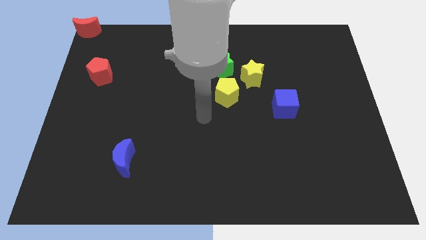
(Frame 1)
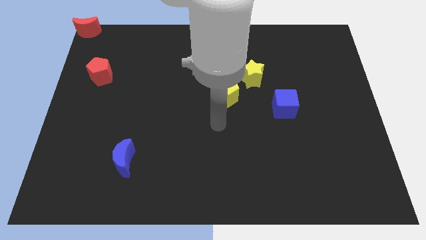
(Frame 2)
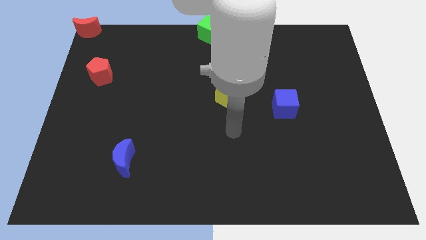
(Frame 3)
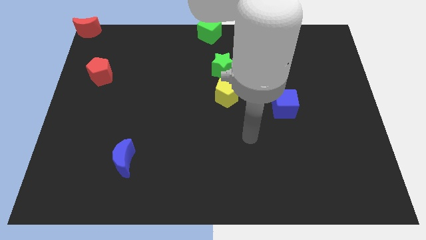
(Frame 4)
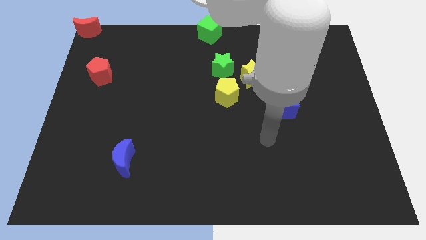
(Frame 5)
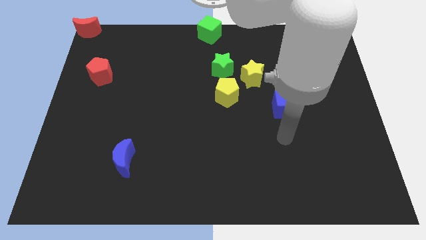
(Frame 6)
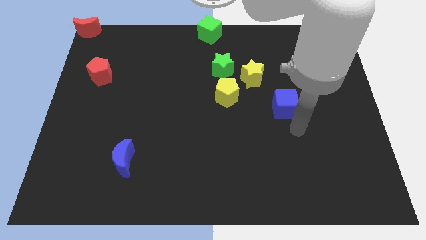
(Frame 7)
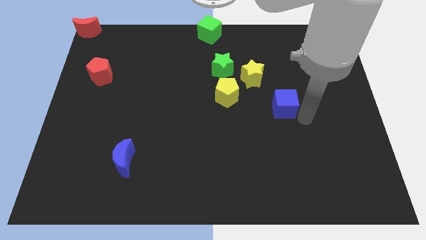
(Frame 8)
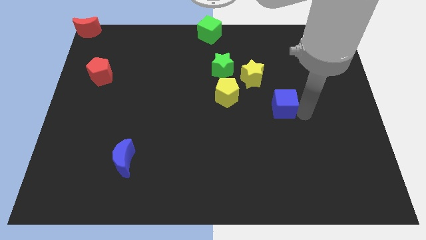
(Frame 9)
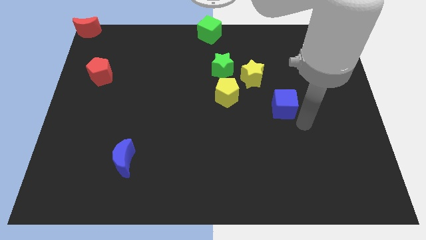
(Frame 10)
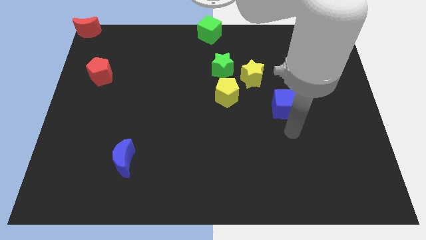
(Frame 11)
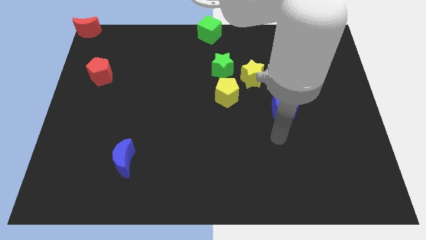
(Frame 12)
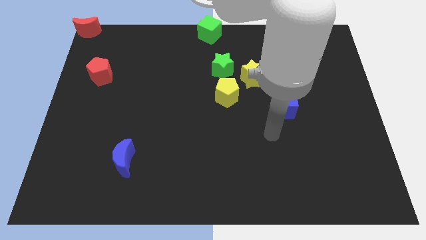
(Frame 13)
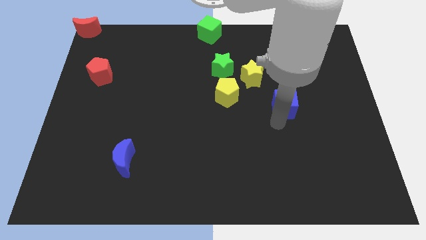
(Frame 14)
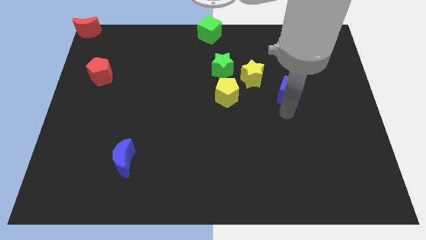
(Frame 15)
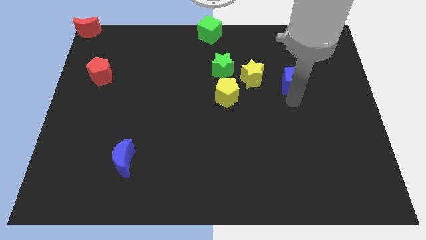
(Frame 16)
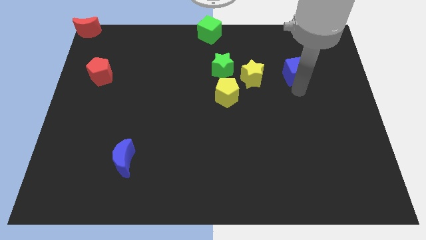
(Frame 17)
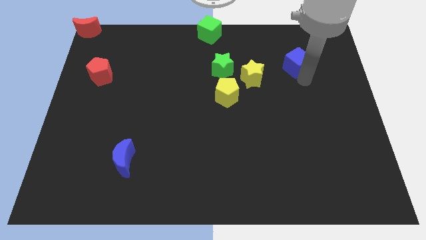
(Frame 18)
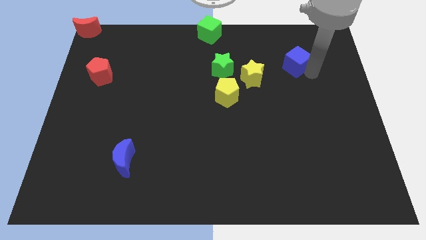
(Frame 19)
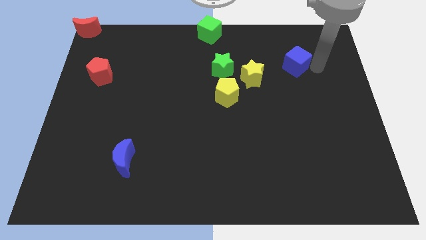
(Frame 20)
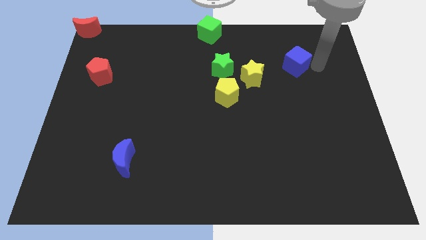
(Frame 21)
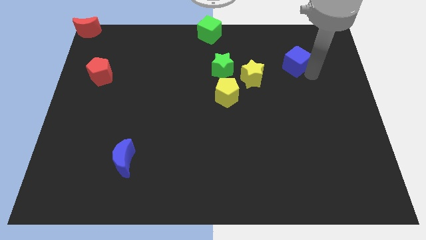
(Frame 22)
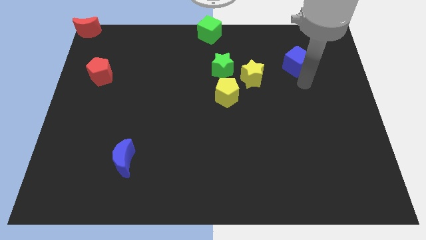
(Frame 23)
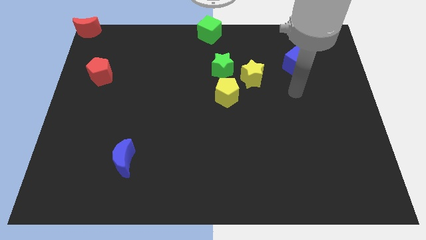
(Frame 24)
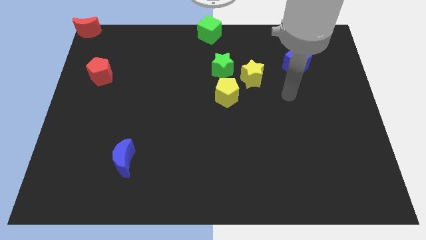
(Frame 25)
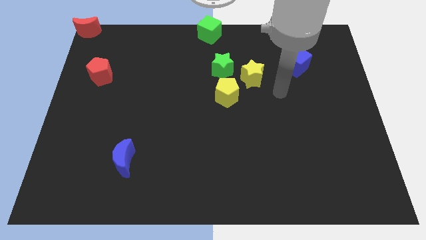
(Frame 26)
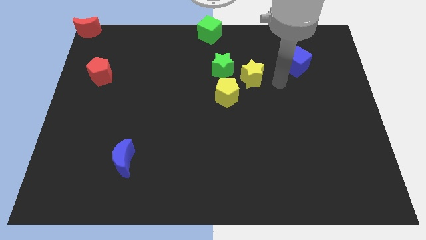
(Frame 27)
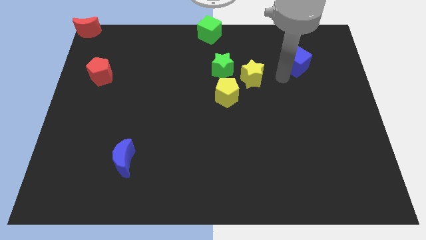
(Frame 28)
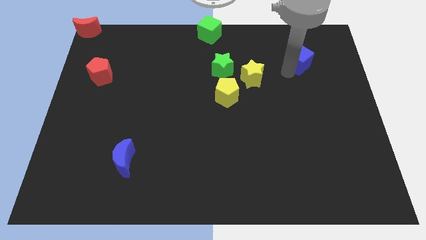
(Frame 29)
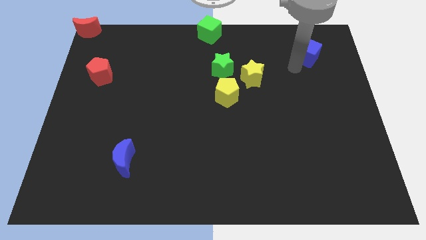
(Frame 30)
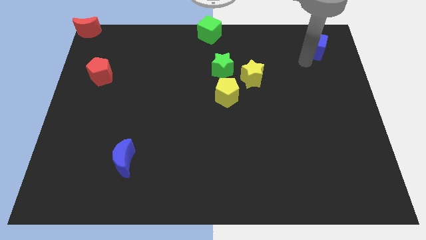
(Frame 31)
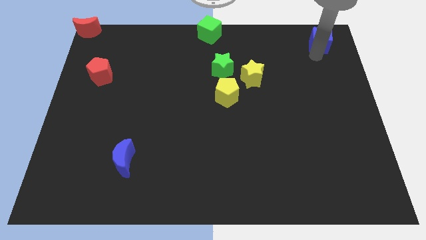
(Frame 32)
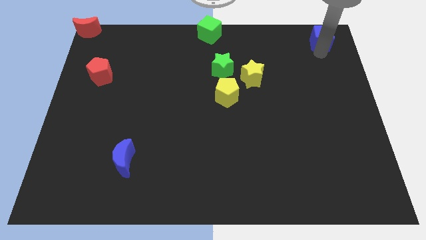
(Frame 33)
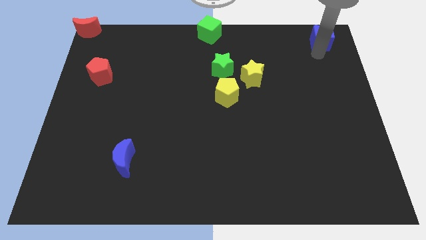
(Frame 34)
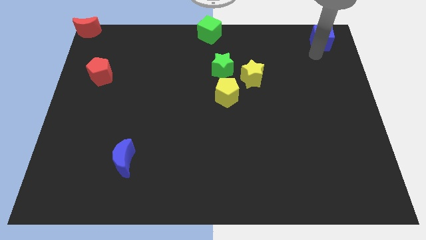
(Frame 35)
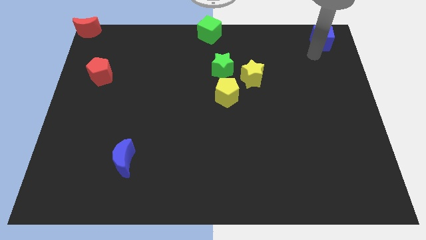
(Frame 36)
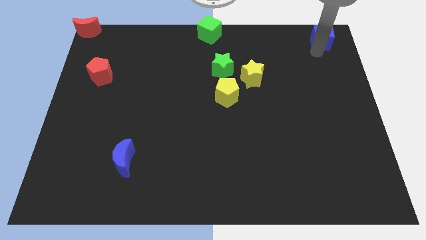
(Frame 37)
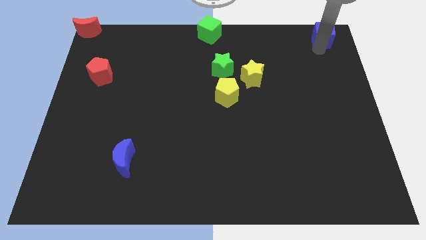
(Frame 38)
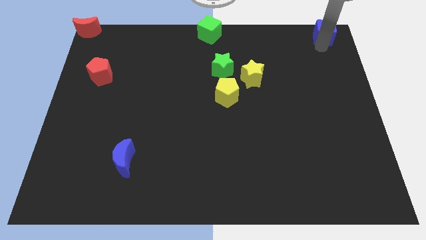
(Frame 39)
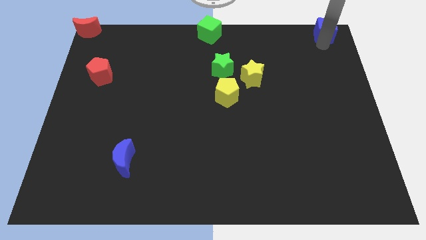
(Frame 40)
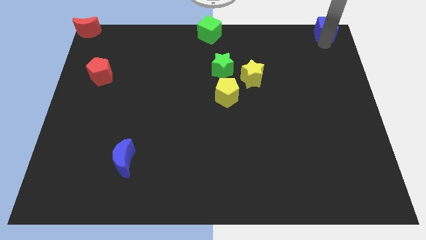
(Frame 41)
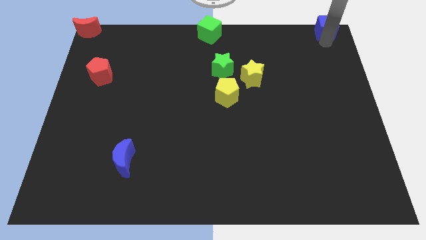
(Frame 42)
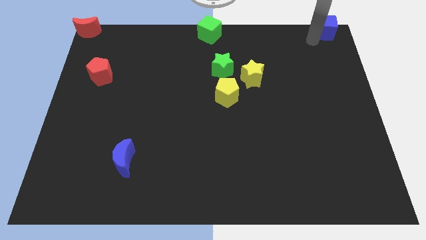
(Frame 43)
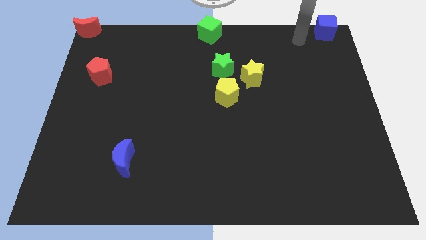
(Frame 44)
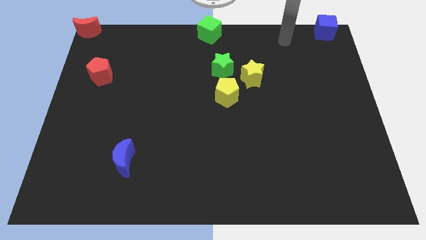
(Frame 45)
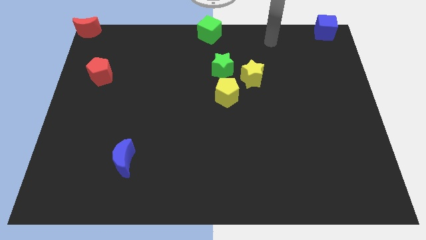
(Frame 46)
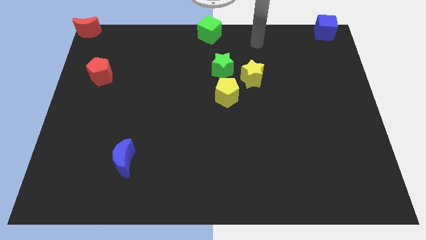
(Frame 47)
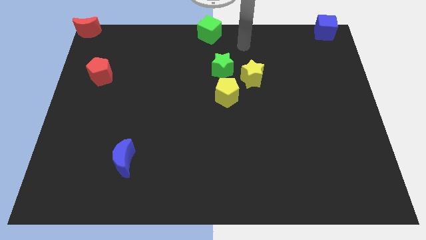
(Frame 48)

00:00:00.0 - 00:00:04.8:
move the blue cube to the top right corner of the board

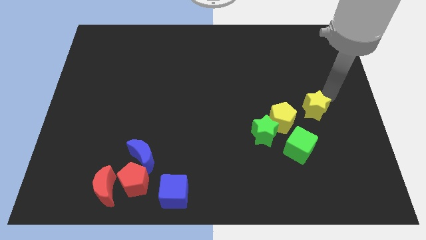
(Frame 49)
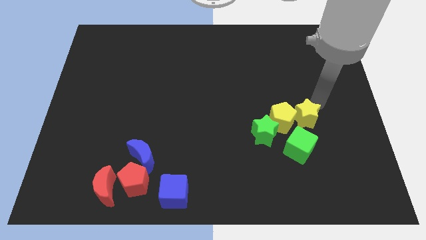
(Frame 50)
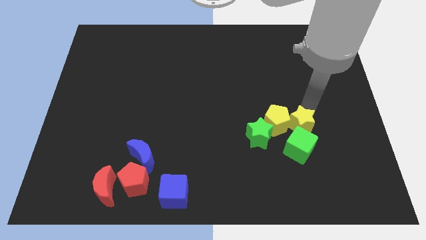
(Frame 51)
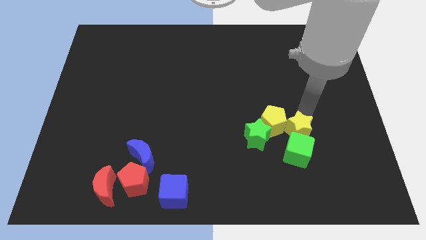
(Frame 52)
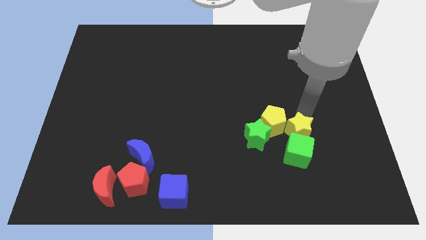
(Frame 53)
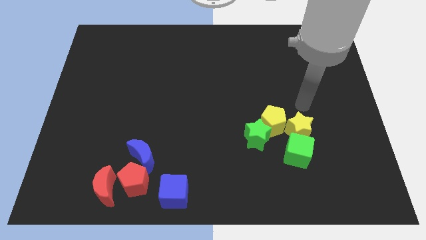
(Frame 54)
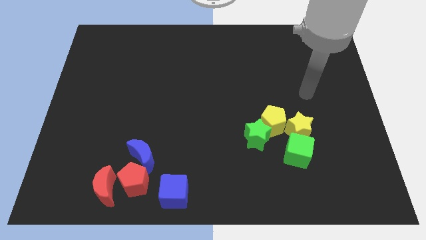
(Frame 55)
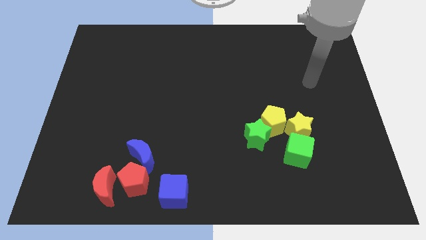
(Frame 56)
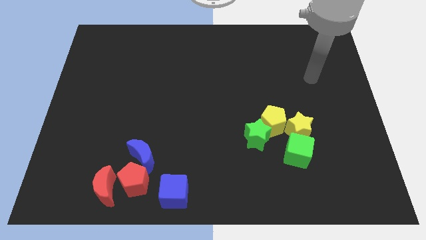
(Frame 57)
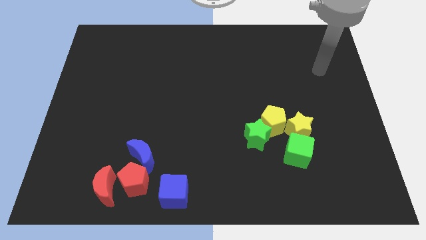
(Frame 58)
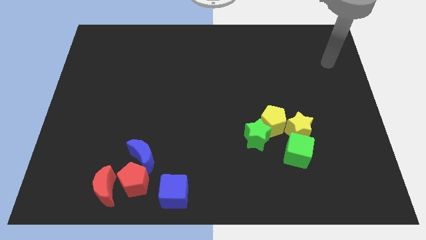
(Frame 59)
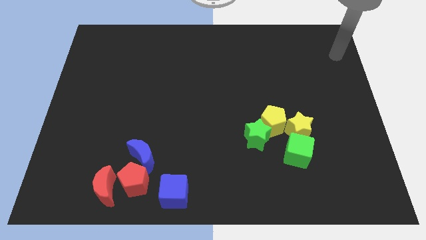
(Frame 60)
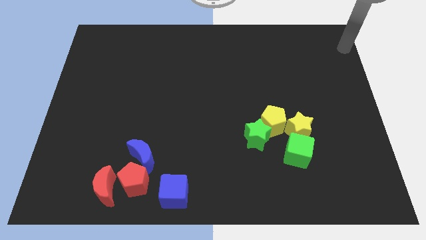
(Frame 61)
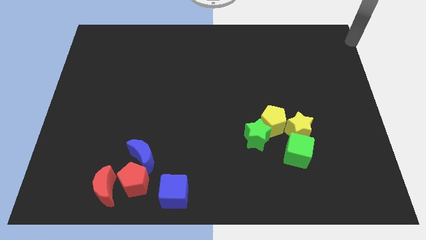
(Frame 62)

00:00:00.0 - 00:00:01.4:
push the yellow star to the top of the green cube

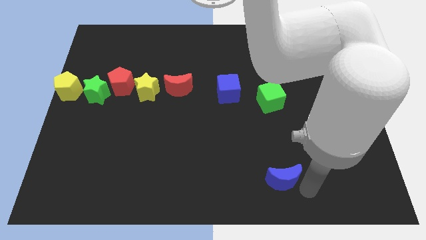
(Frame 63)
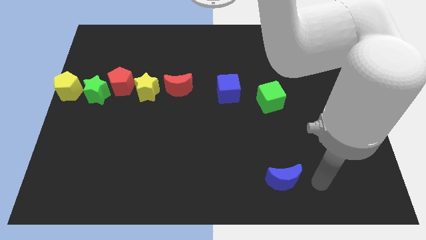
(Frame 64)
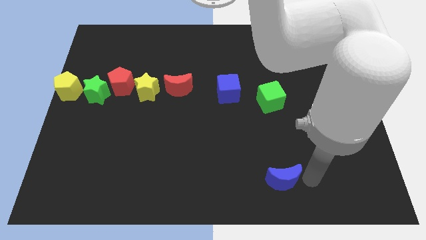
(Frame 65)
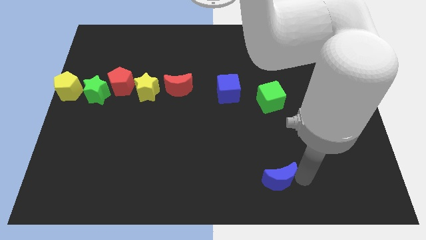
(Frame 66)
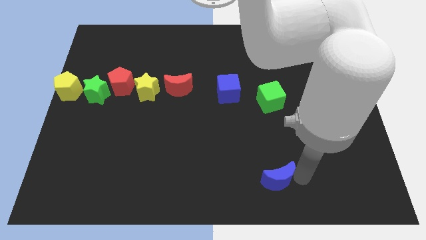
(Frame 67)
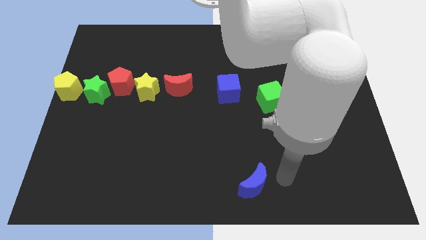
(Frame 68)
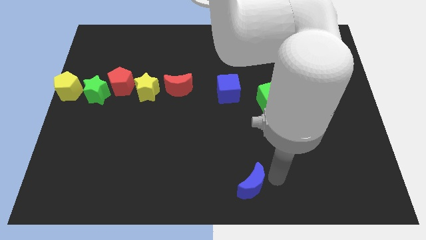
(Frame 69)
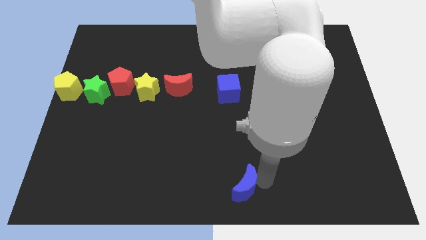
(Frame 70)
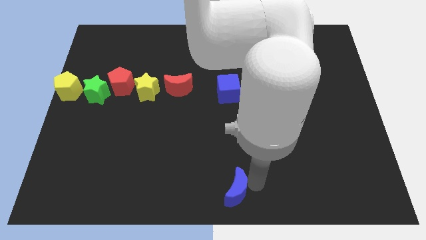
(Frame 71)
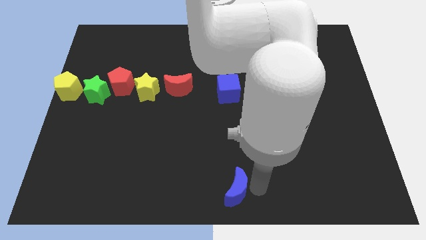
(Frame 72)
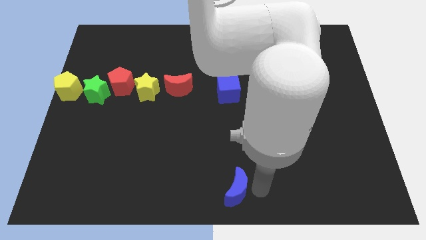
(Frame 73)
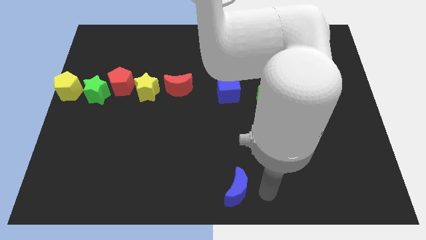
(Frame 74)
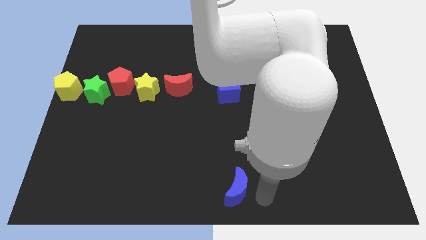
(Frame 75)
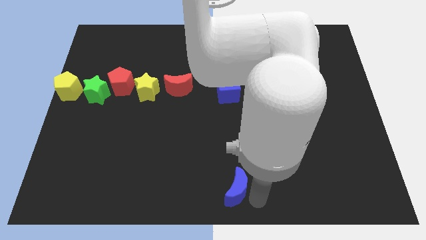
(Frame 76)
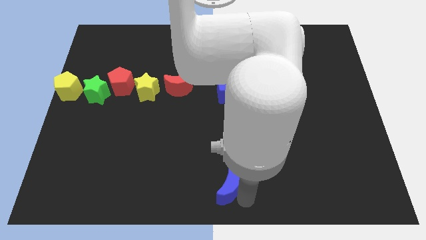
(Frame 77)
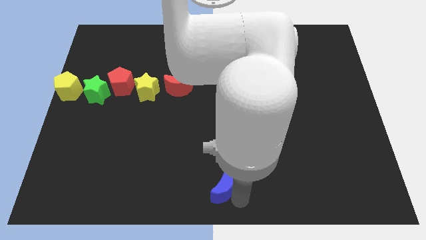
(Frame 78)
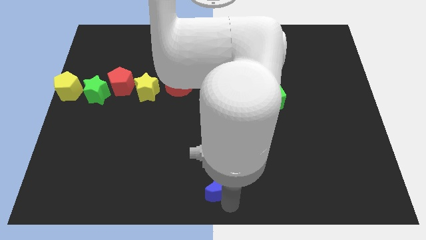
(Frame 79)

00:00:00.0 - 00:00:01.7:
move the blue crescent to the bottom centre of the board

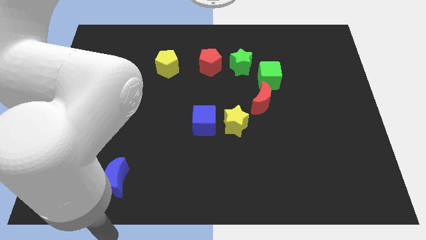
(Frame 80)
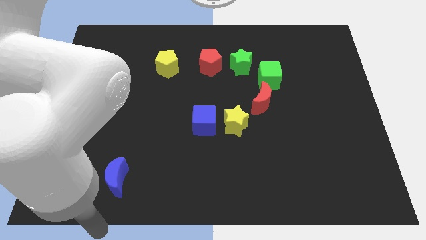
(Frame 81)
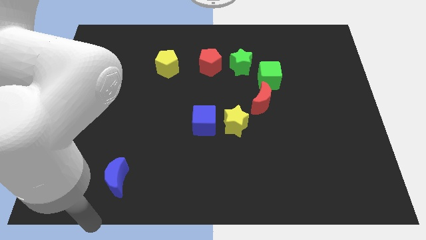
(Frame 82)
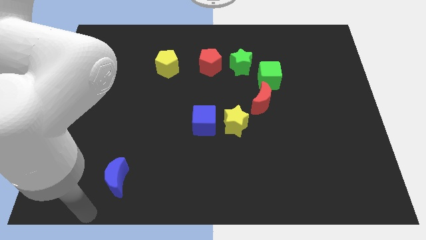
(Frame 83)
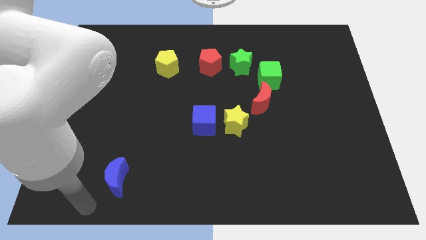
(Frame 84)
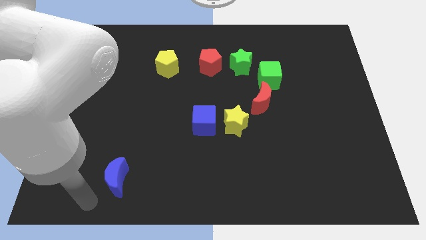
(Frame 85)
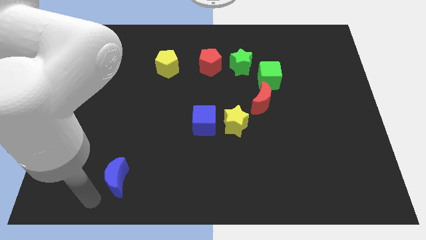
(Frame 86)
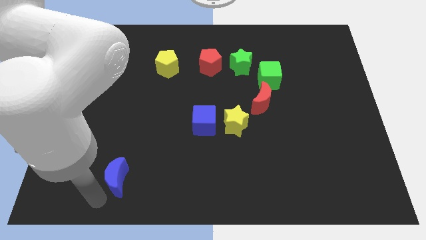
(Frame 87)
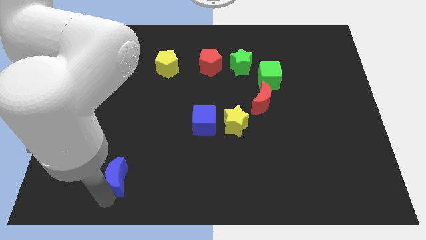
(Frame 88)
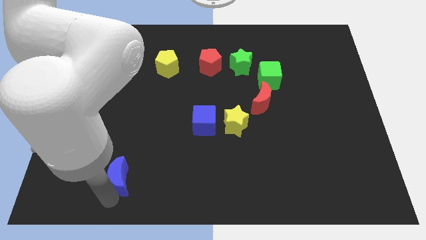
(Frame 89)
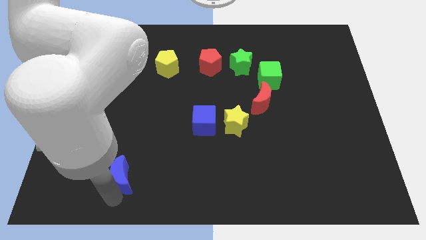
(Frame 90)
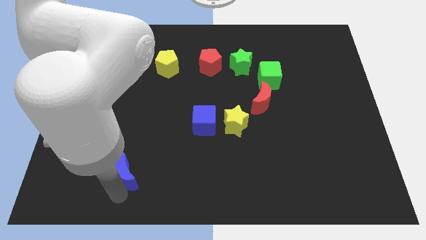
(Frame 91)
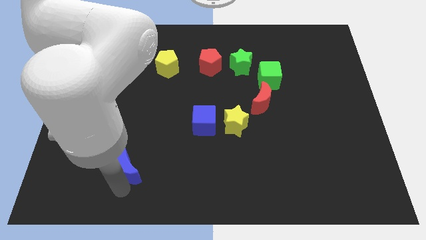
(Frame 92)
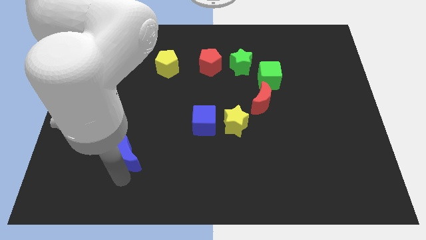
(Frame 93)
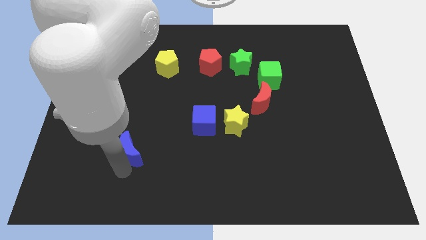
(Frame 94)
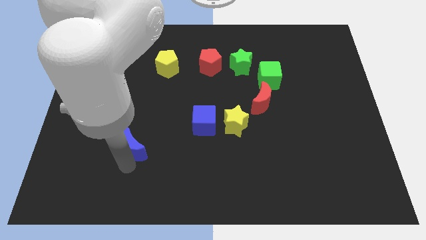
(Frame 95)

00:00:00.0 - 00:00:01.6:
drag the blue moon slightly up
